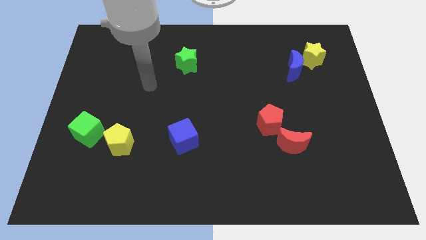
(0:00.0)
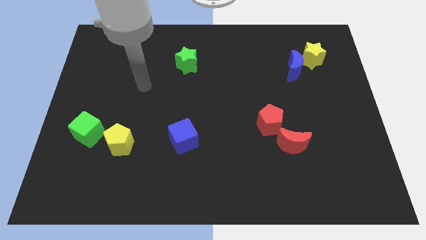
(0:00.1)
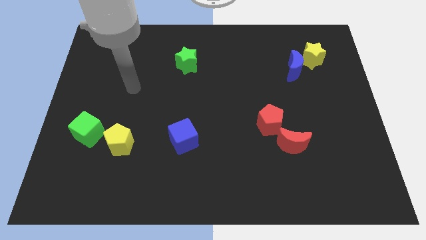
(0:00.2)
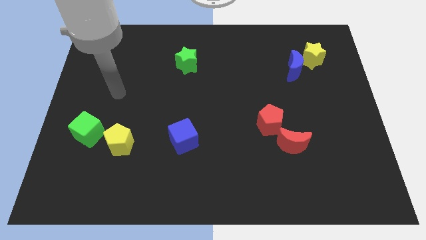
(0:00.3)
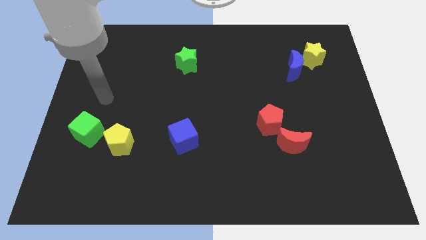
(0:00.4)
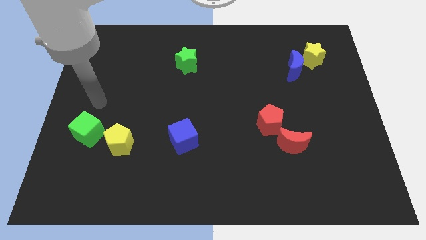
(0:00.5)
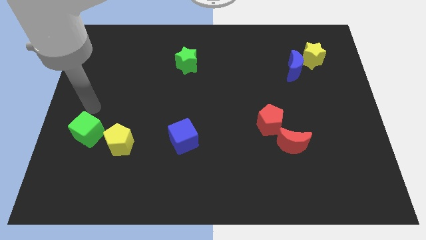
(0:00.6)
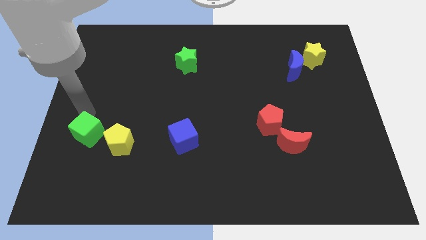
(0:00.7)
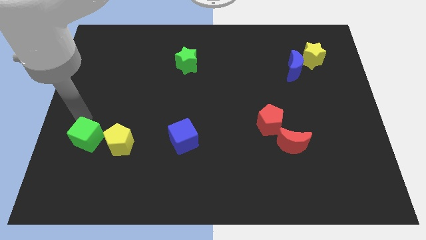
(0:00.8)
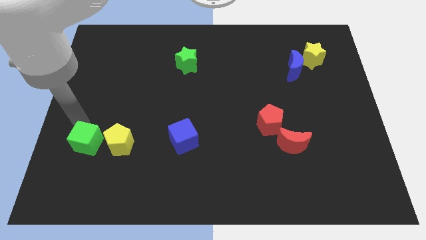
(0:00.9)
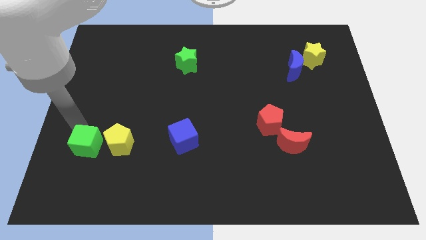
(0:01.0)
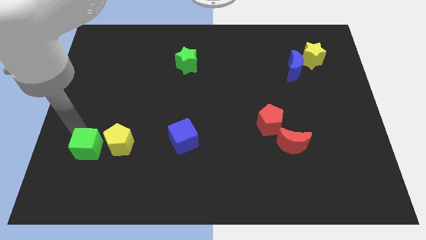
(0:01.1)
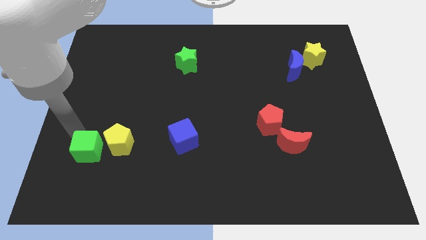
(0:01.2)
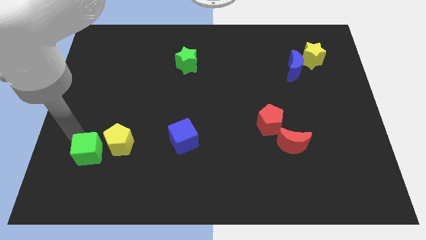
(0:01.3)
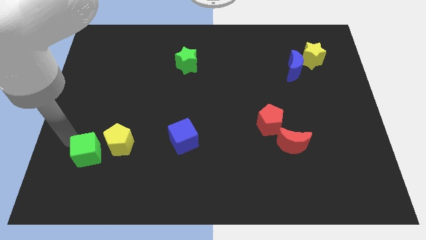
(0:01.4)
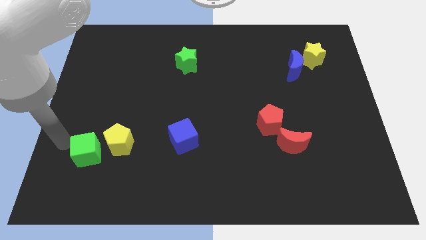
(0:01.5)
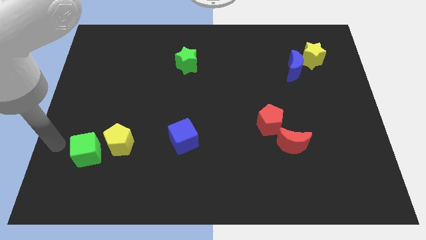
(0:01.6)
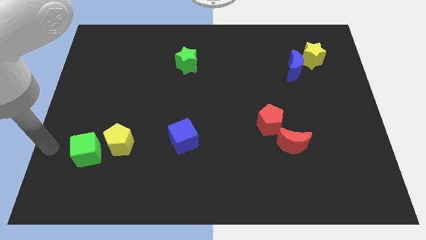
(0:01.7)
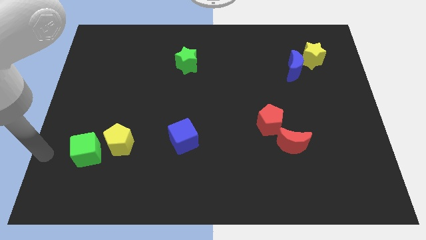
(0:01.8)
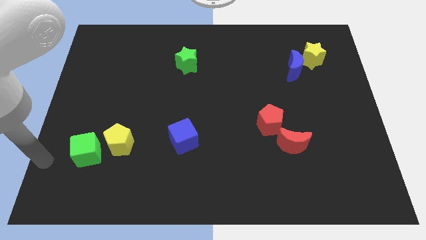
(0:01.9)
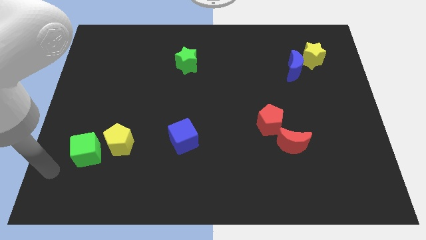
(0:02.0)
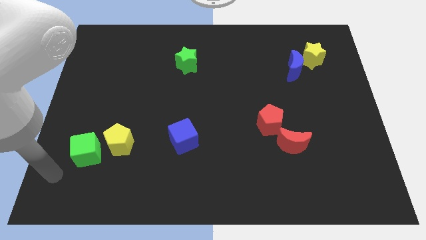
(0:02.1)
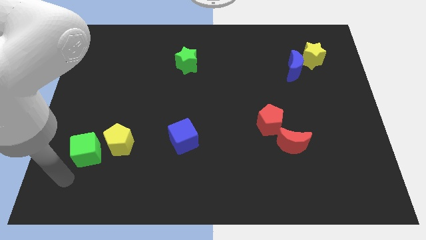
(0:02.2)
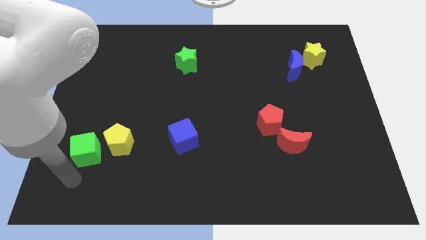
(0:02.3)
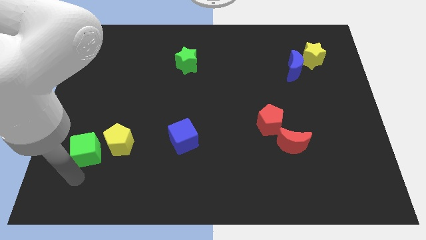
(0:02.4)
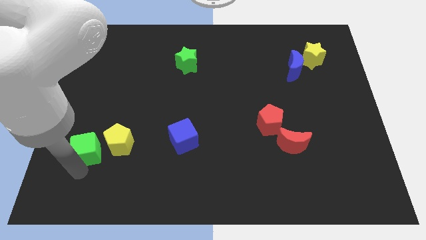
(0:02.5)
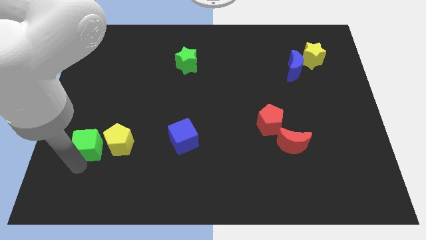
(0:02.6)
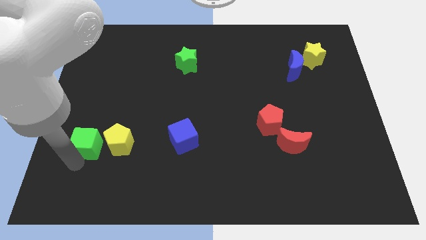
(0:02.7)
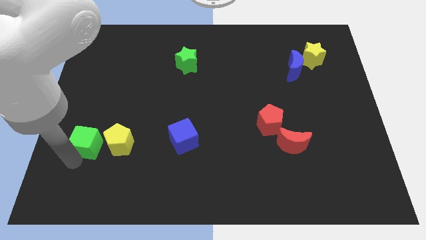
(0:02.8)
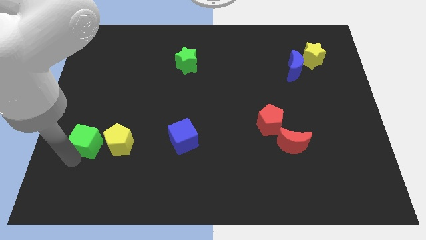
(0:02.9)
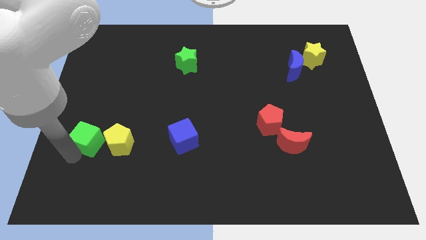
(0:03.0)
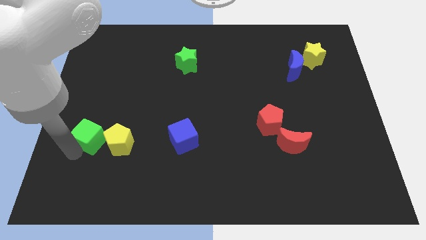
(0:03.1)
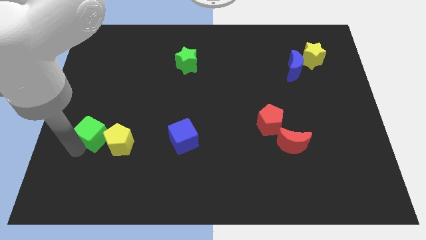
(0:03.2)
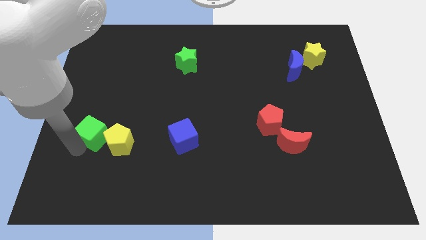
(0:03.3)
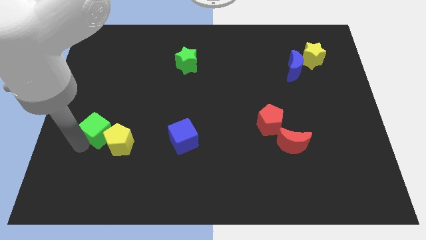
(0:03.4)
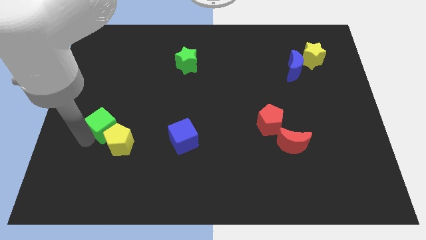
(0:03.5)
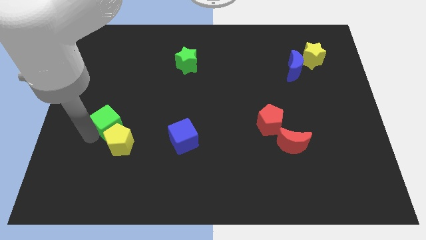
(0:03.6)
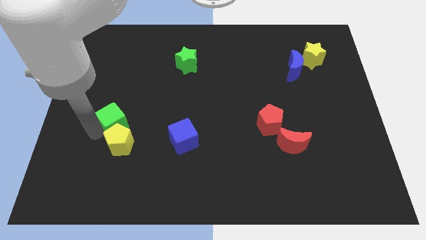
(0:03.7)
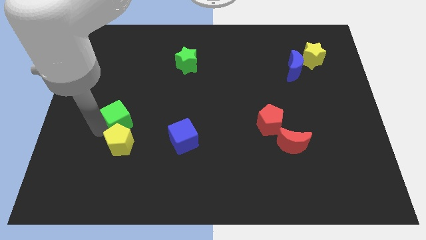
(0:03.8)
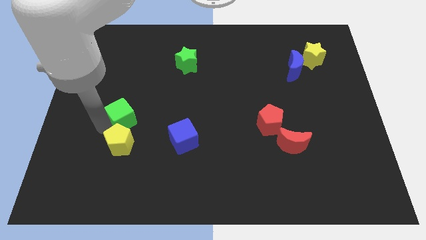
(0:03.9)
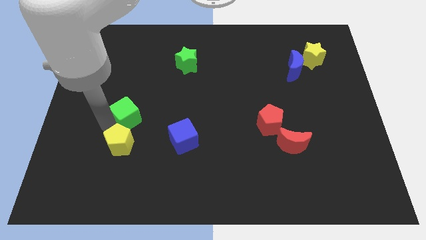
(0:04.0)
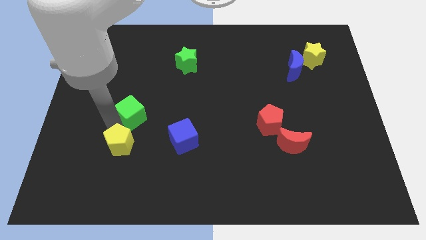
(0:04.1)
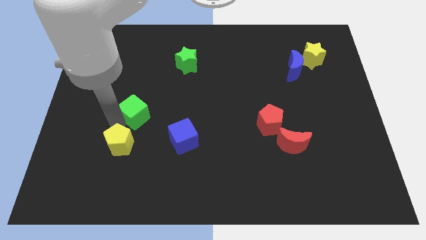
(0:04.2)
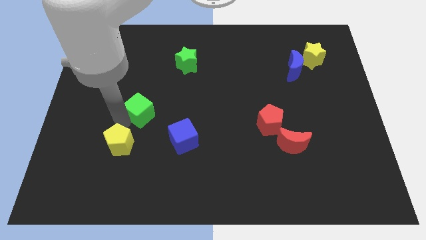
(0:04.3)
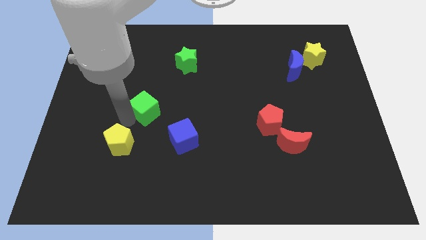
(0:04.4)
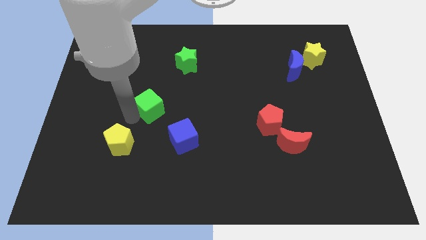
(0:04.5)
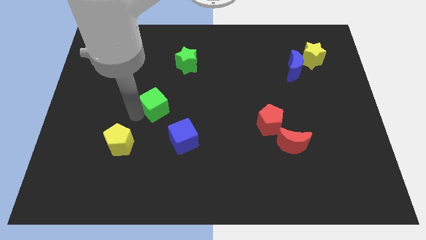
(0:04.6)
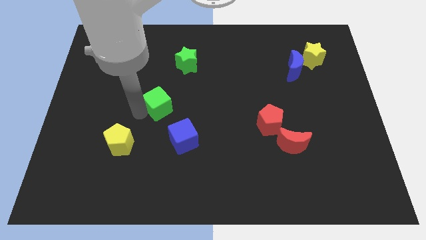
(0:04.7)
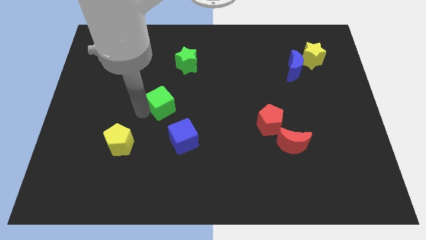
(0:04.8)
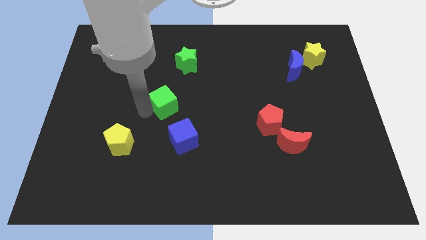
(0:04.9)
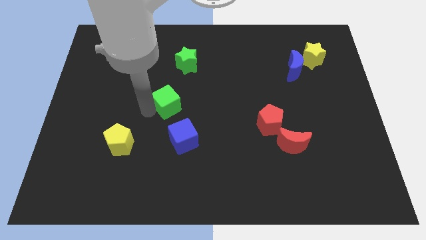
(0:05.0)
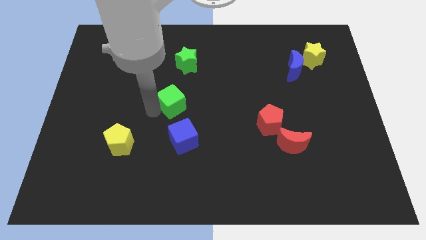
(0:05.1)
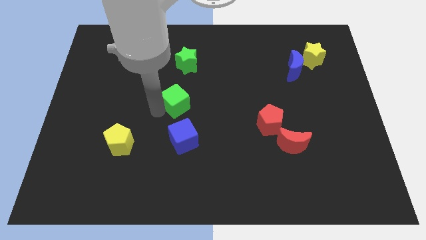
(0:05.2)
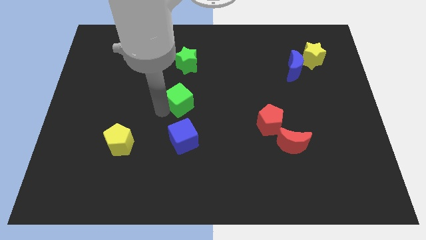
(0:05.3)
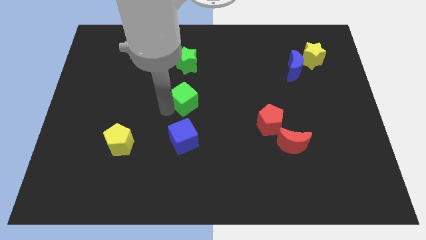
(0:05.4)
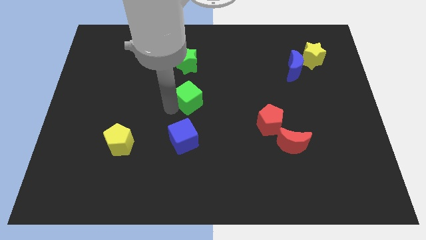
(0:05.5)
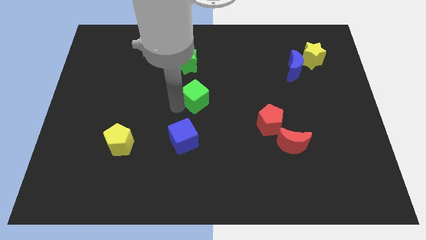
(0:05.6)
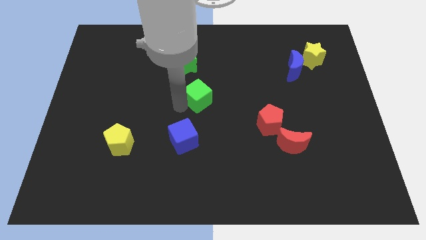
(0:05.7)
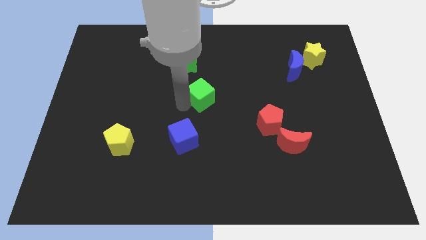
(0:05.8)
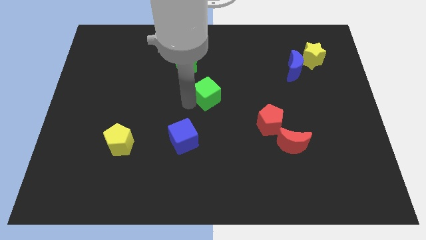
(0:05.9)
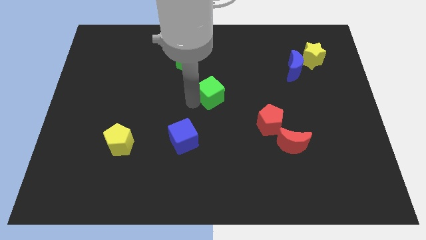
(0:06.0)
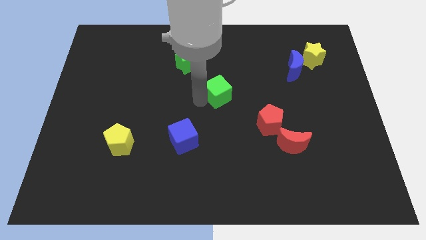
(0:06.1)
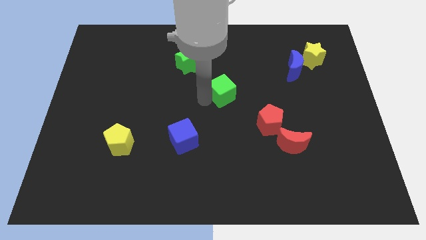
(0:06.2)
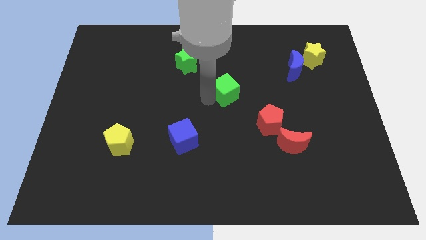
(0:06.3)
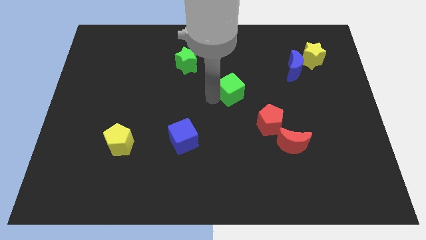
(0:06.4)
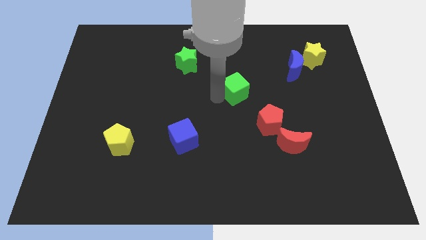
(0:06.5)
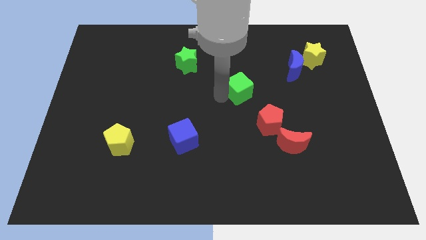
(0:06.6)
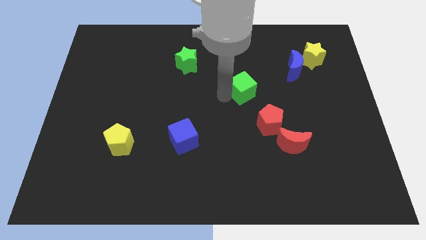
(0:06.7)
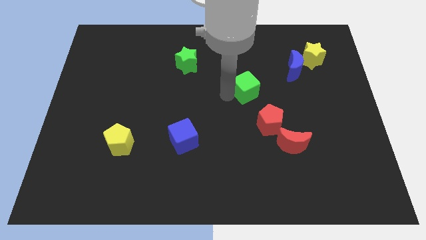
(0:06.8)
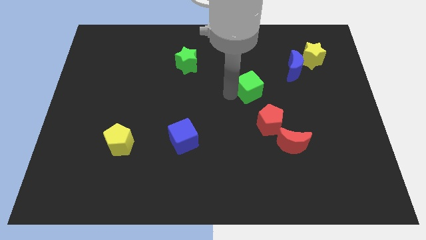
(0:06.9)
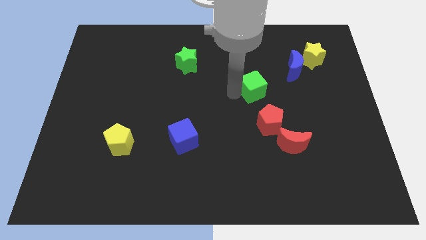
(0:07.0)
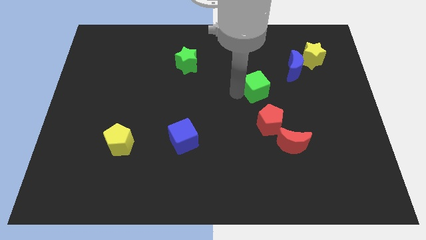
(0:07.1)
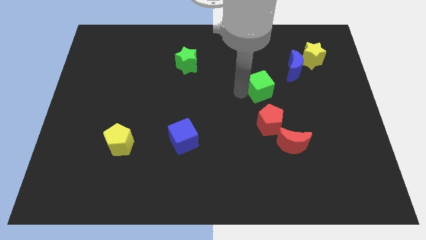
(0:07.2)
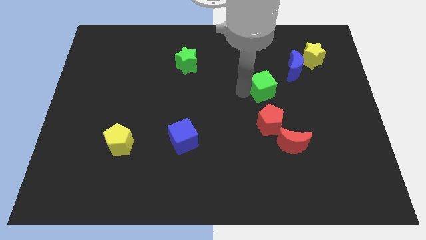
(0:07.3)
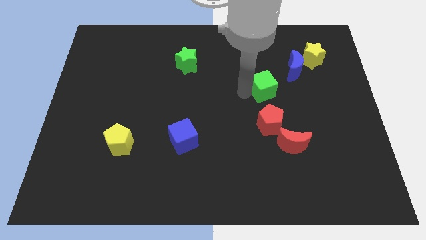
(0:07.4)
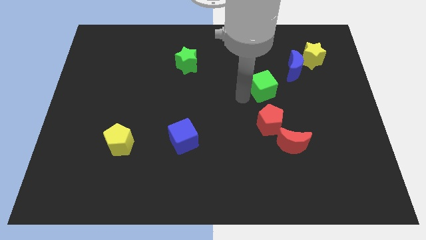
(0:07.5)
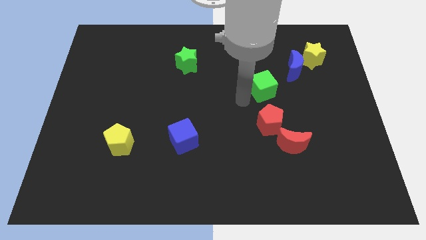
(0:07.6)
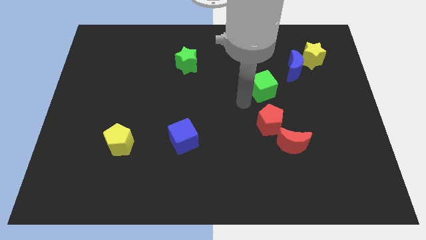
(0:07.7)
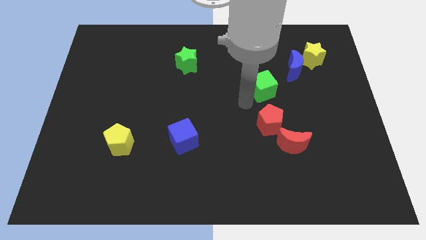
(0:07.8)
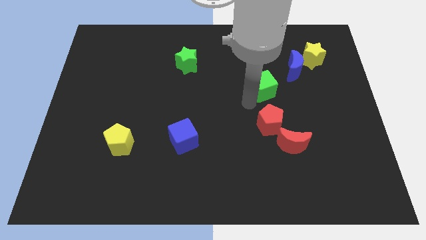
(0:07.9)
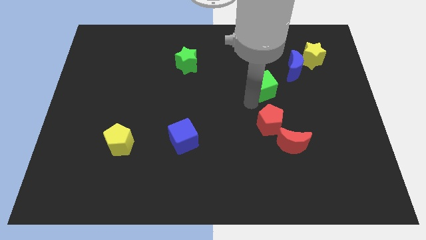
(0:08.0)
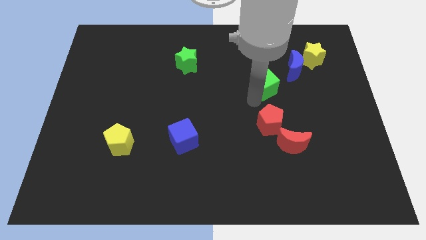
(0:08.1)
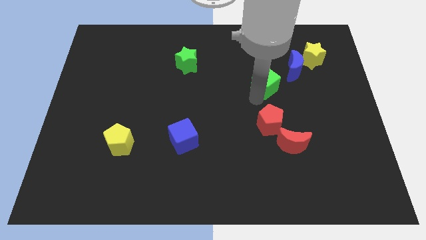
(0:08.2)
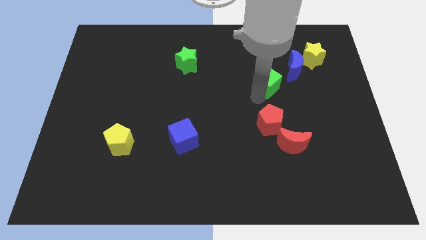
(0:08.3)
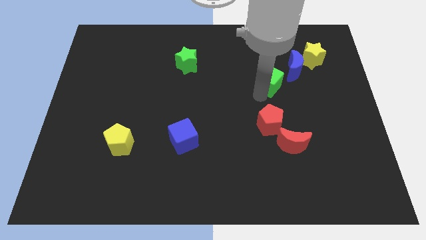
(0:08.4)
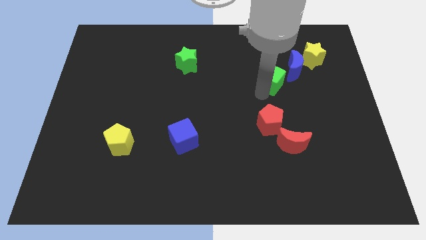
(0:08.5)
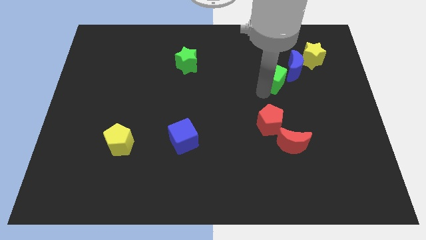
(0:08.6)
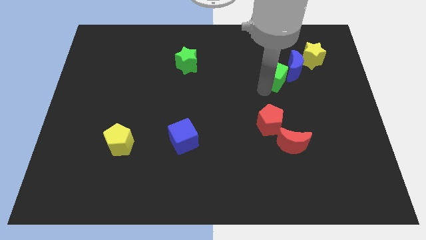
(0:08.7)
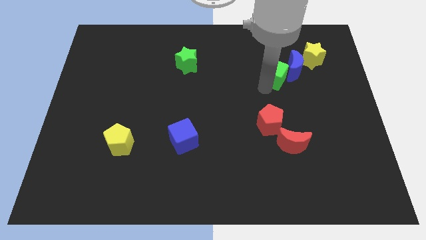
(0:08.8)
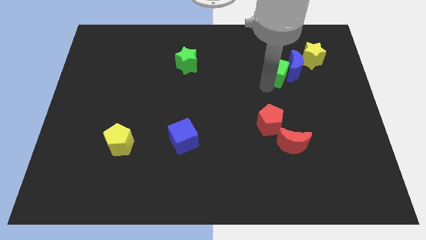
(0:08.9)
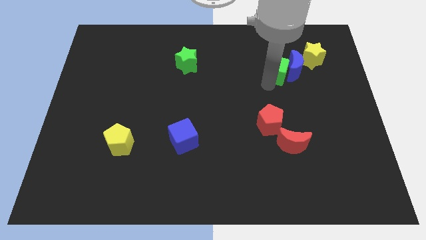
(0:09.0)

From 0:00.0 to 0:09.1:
put the green cube next to the blue moon
